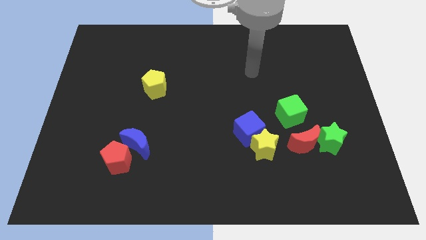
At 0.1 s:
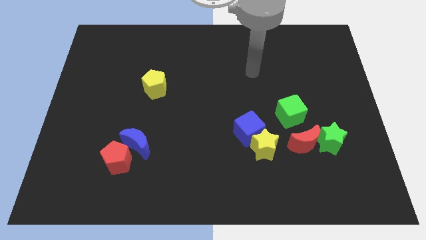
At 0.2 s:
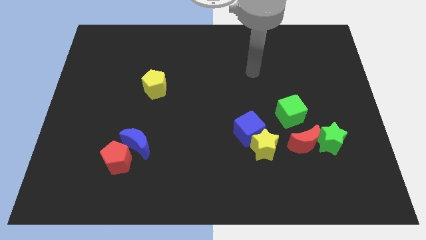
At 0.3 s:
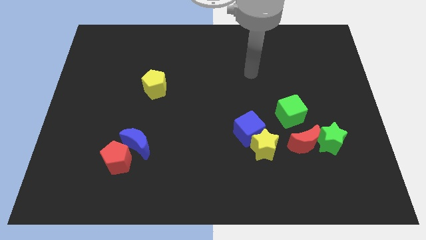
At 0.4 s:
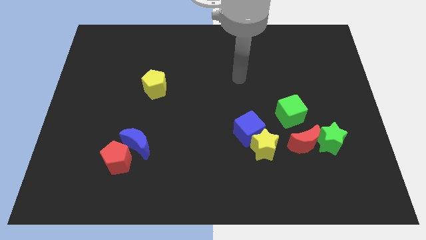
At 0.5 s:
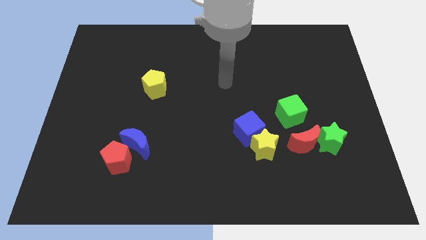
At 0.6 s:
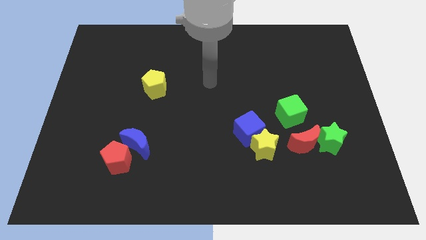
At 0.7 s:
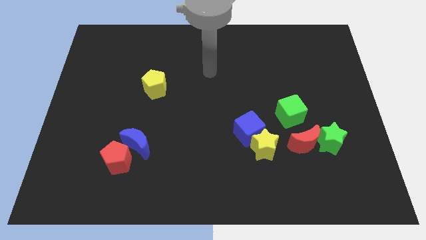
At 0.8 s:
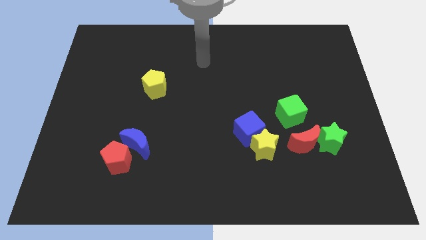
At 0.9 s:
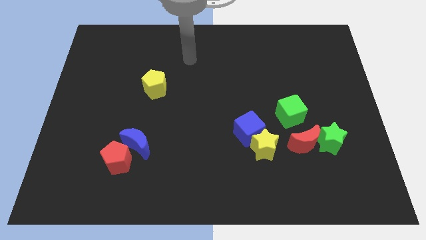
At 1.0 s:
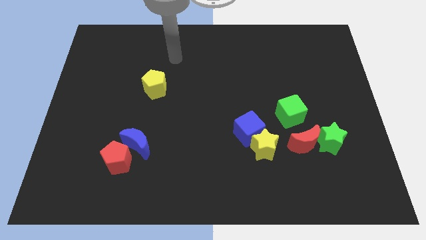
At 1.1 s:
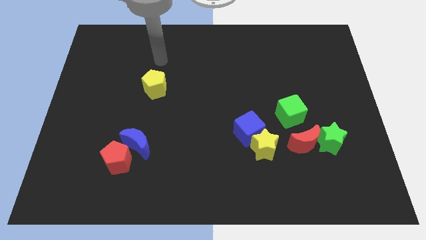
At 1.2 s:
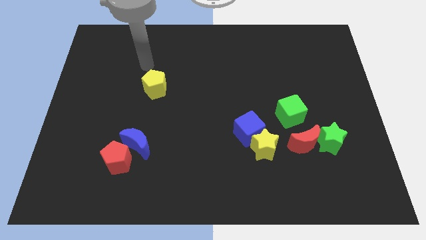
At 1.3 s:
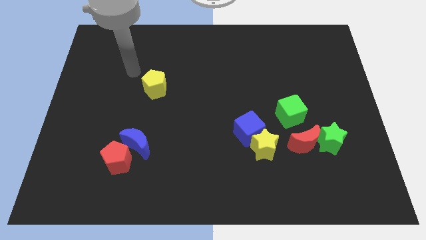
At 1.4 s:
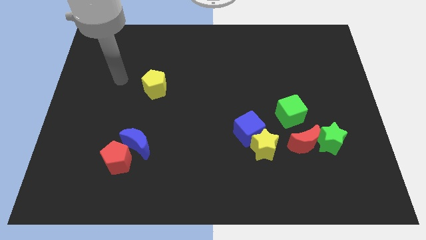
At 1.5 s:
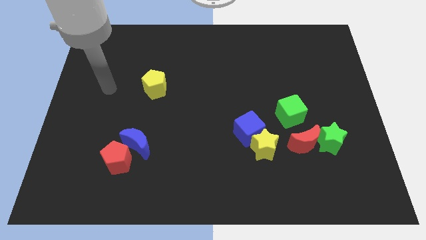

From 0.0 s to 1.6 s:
place your arm to the left of the yellow pentagon

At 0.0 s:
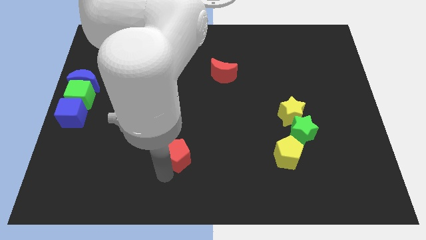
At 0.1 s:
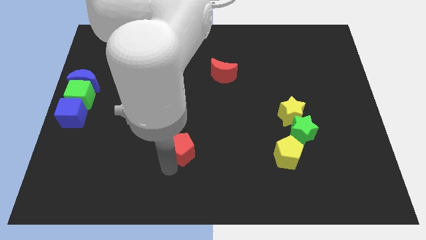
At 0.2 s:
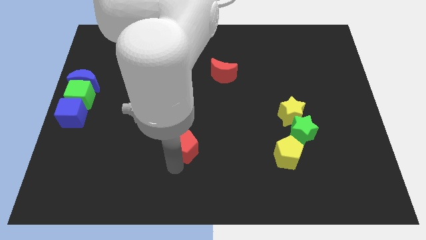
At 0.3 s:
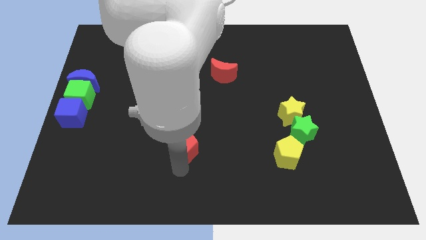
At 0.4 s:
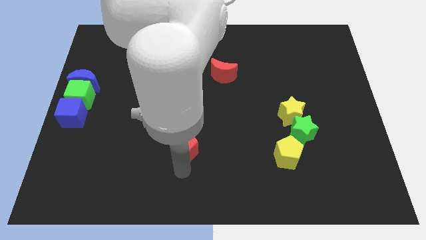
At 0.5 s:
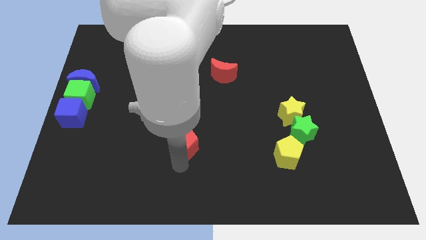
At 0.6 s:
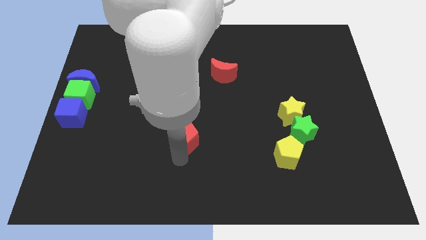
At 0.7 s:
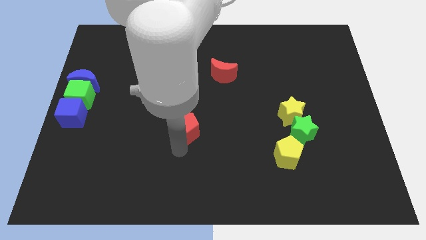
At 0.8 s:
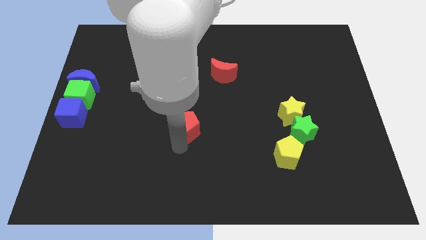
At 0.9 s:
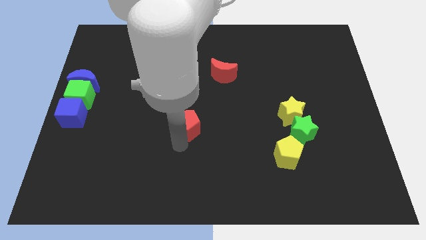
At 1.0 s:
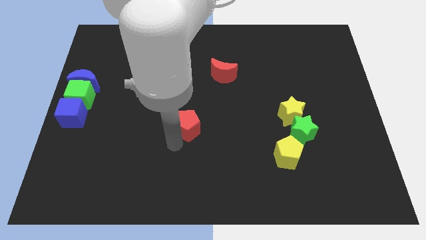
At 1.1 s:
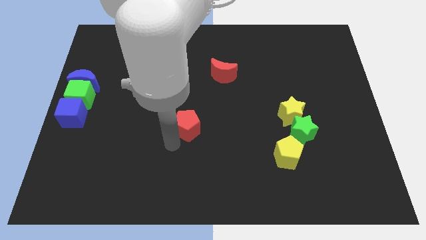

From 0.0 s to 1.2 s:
push the red pentagon upward

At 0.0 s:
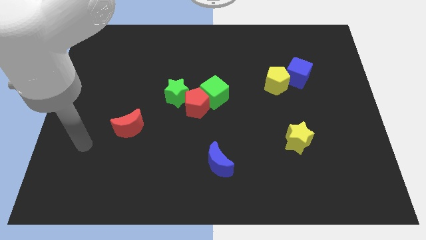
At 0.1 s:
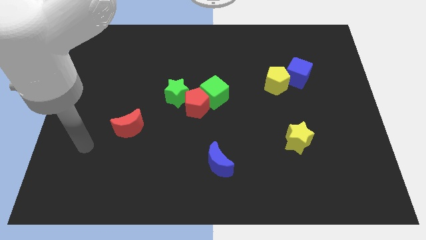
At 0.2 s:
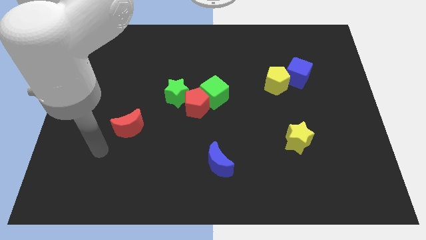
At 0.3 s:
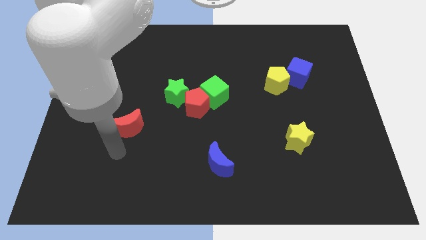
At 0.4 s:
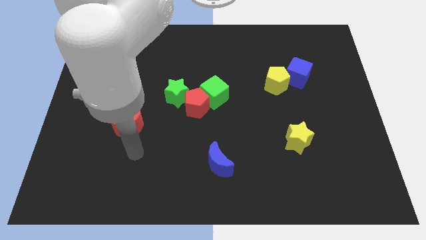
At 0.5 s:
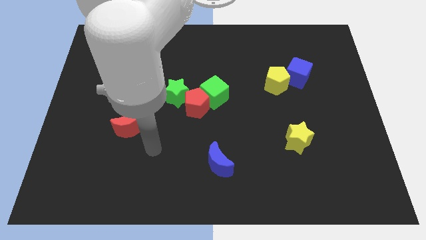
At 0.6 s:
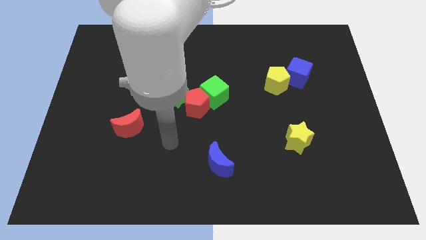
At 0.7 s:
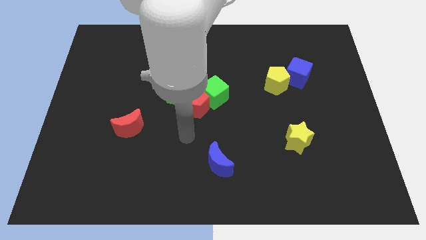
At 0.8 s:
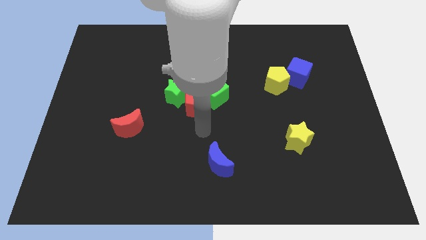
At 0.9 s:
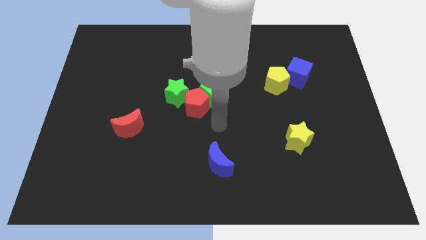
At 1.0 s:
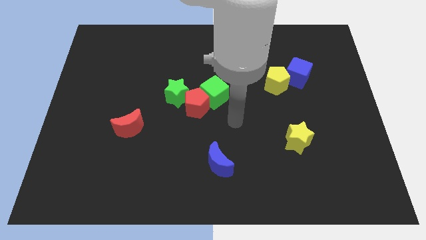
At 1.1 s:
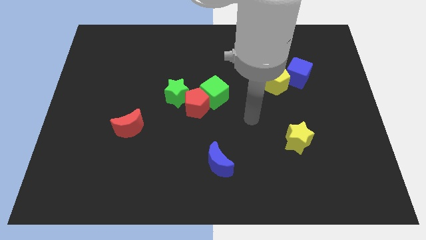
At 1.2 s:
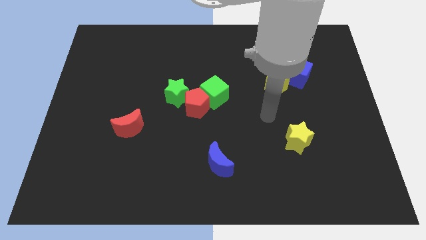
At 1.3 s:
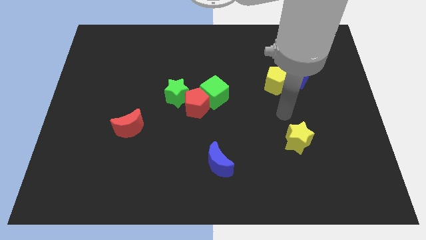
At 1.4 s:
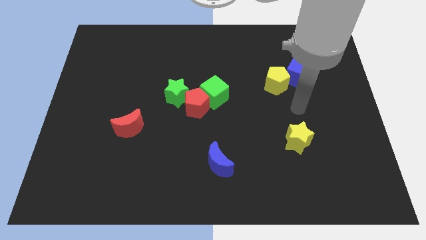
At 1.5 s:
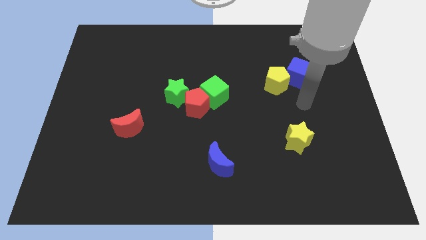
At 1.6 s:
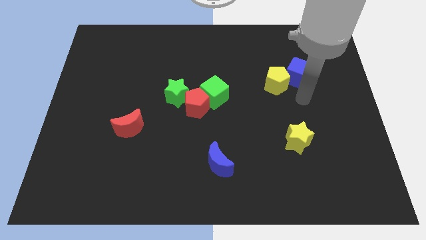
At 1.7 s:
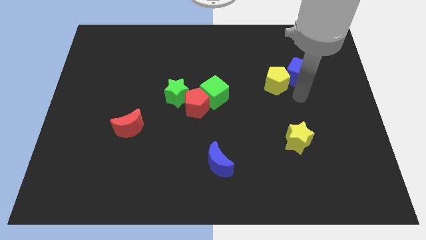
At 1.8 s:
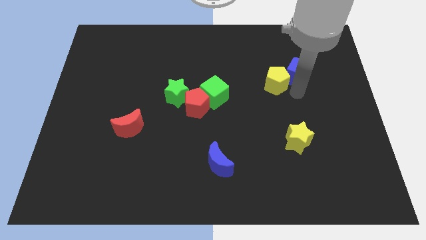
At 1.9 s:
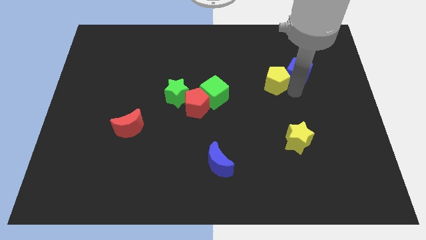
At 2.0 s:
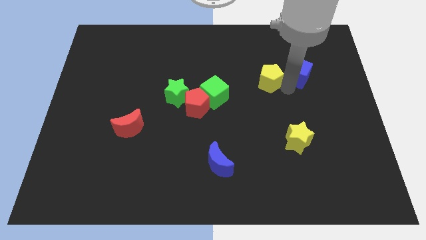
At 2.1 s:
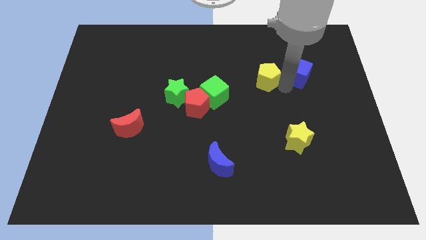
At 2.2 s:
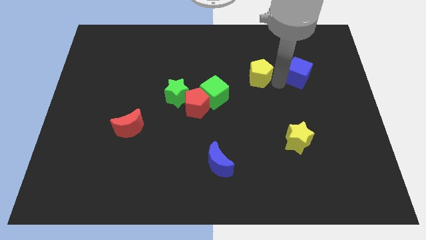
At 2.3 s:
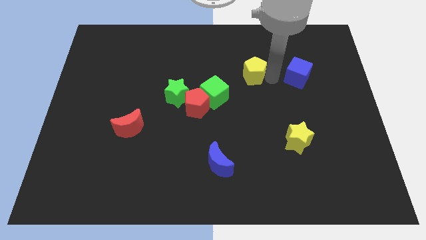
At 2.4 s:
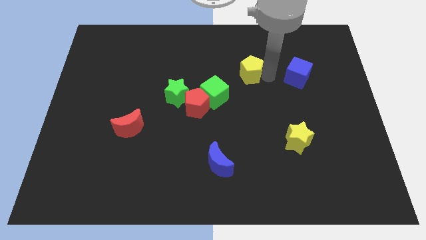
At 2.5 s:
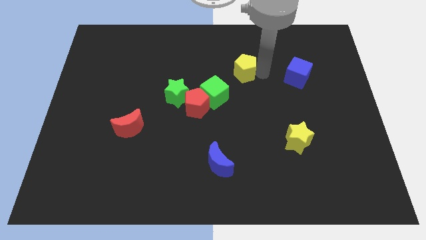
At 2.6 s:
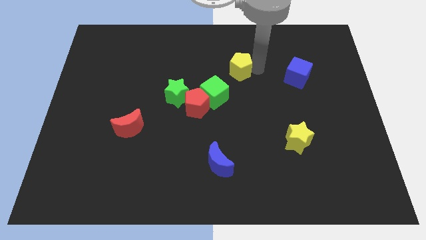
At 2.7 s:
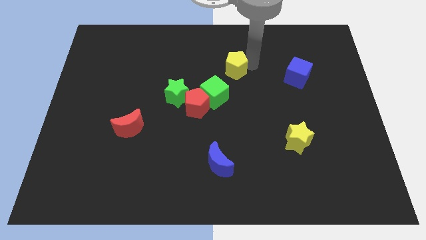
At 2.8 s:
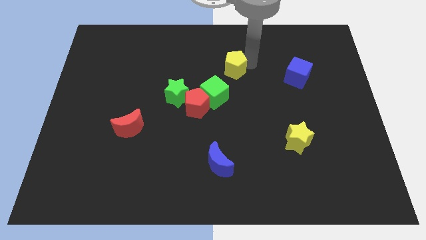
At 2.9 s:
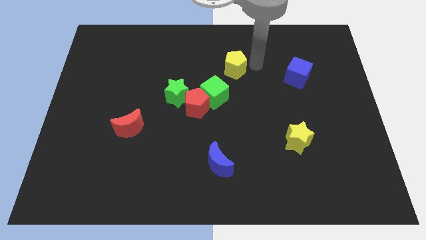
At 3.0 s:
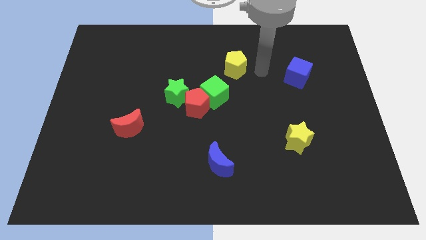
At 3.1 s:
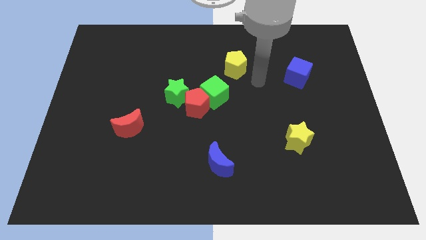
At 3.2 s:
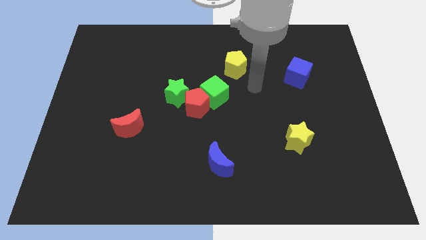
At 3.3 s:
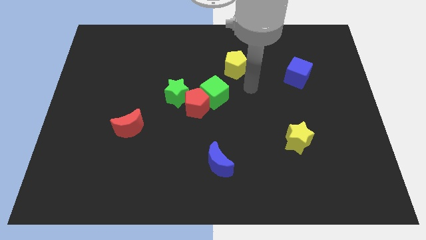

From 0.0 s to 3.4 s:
move the yellow pentagon towards the top center of board

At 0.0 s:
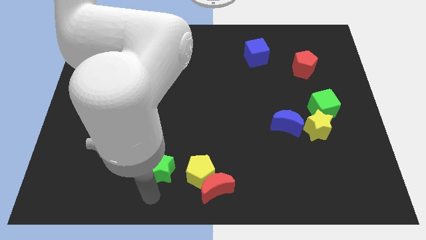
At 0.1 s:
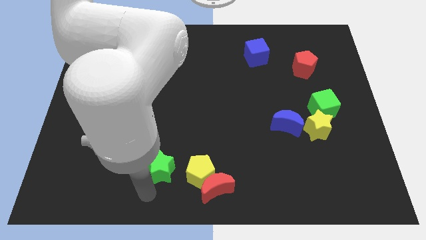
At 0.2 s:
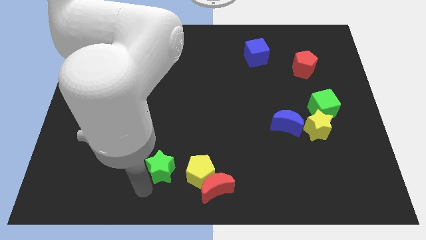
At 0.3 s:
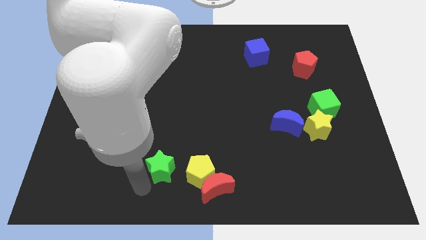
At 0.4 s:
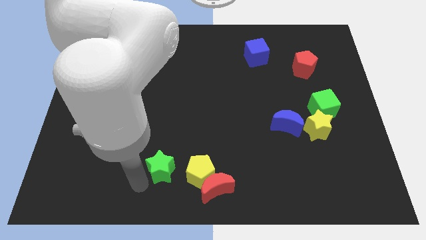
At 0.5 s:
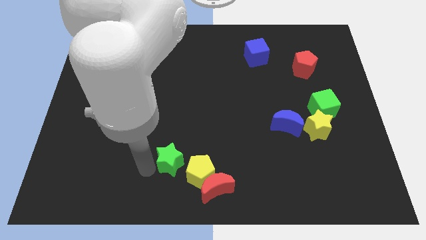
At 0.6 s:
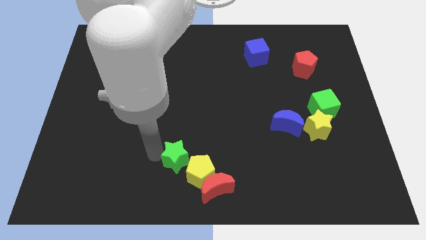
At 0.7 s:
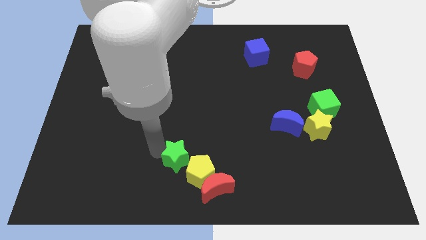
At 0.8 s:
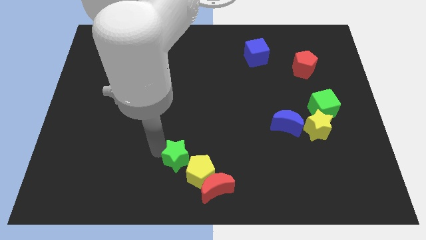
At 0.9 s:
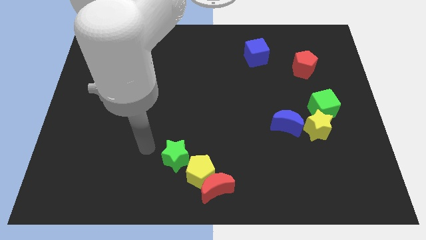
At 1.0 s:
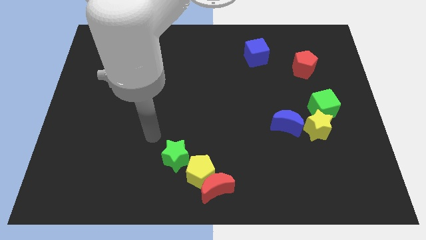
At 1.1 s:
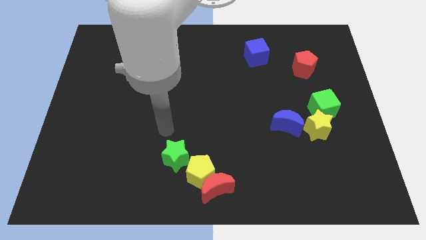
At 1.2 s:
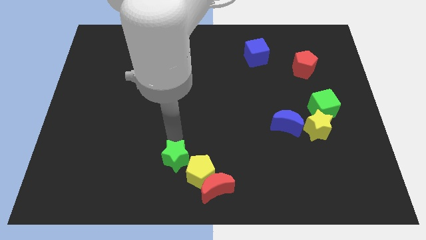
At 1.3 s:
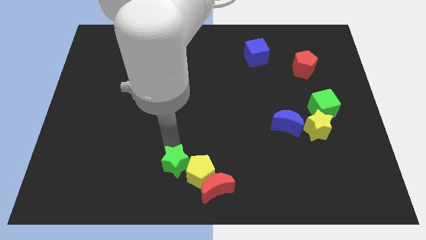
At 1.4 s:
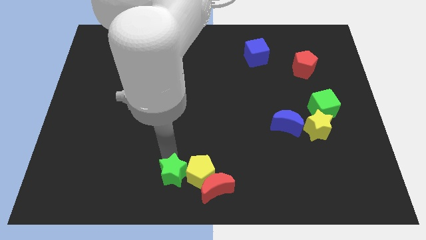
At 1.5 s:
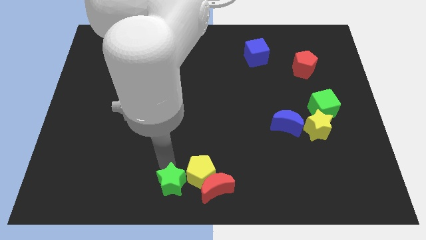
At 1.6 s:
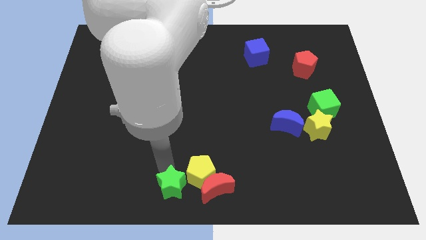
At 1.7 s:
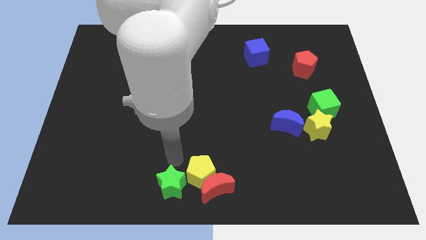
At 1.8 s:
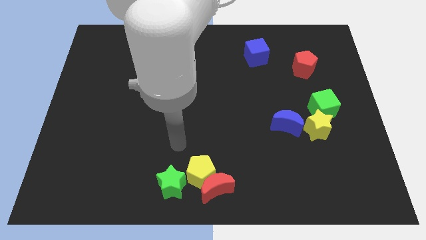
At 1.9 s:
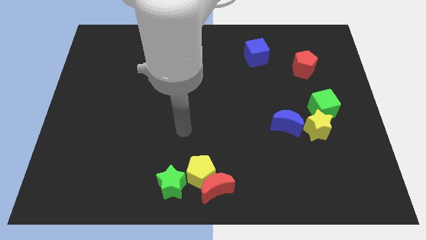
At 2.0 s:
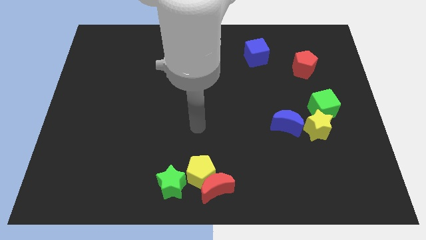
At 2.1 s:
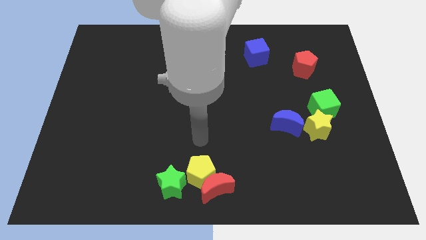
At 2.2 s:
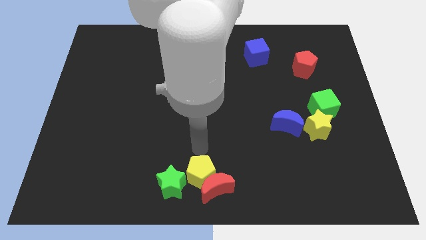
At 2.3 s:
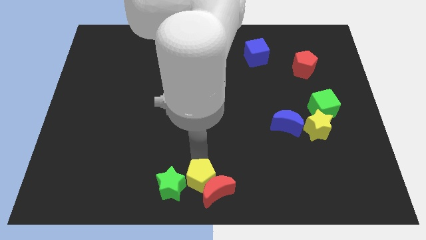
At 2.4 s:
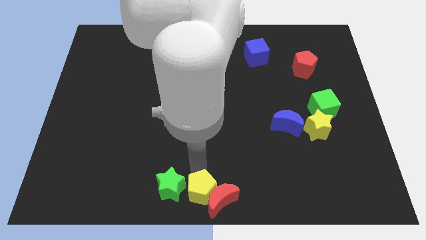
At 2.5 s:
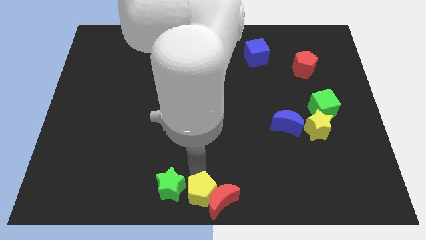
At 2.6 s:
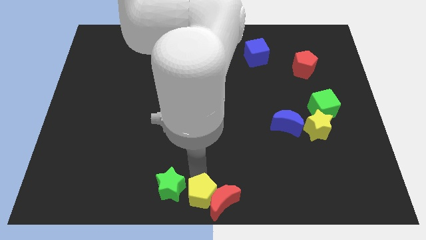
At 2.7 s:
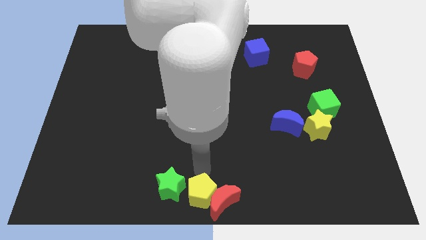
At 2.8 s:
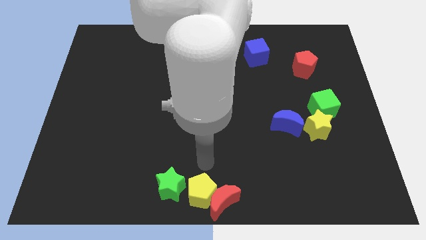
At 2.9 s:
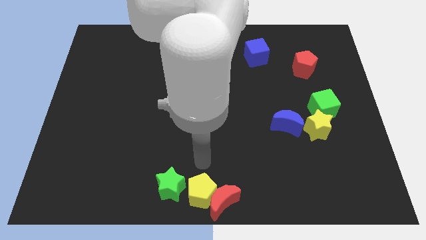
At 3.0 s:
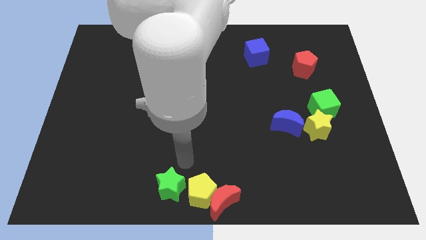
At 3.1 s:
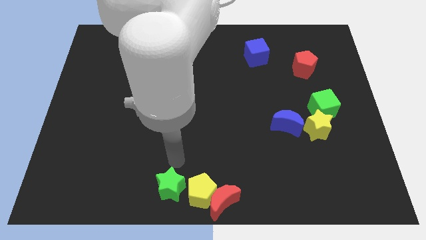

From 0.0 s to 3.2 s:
push green star and yellow pentagon to the bottom of the board
